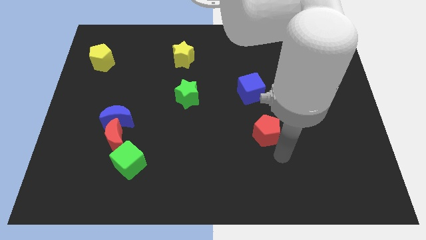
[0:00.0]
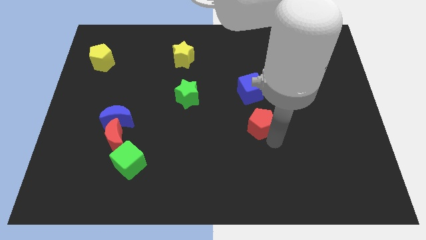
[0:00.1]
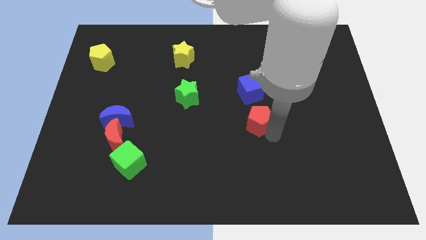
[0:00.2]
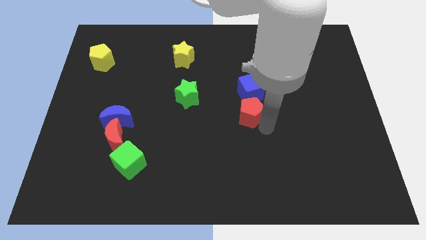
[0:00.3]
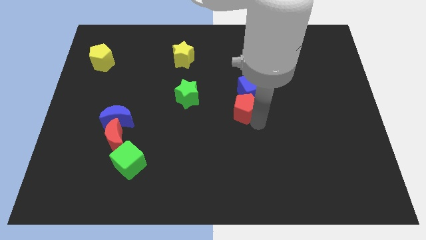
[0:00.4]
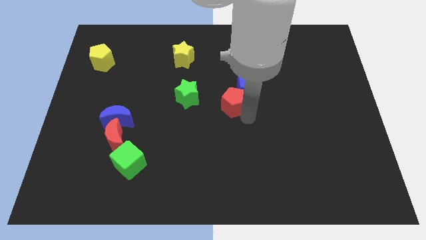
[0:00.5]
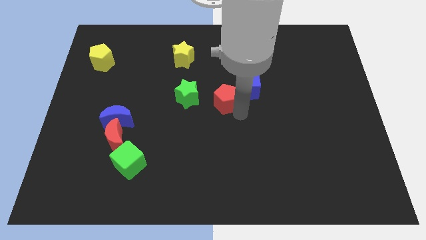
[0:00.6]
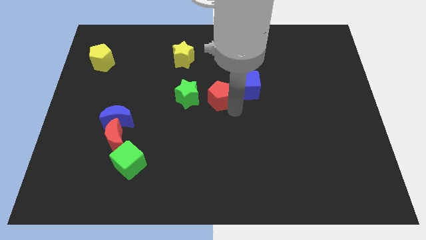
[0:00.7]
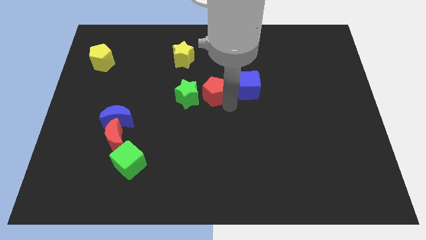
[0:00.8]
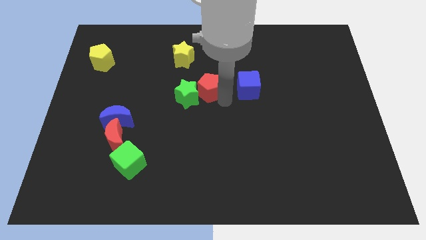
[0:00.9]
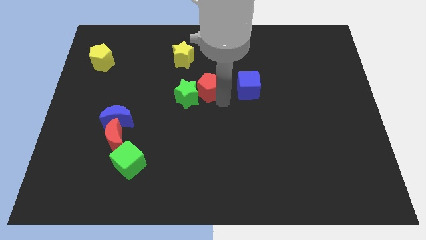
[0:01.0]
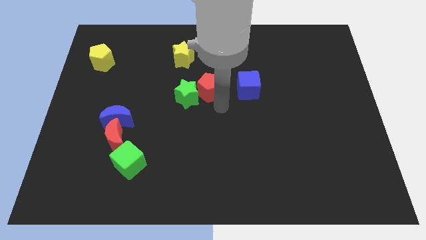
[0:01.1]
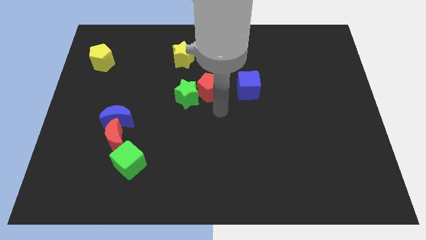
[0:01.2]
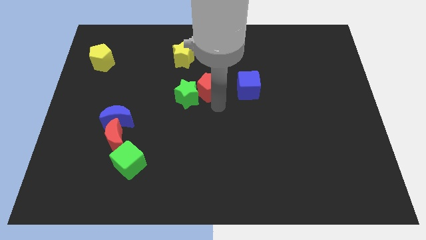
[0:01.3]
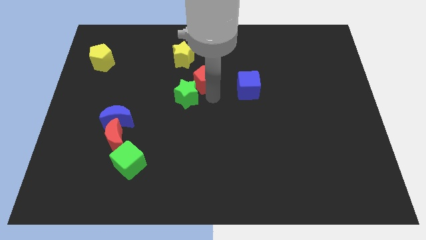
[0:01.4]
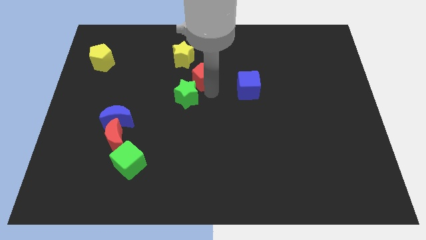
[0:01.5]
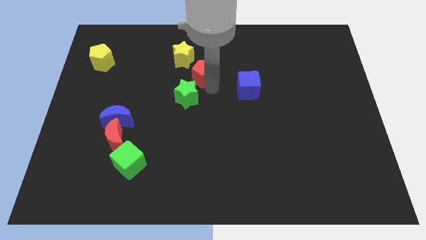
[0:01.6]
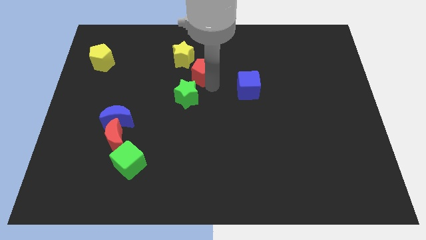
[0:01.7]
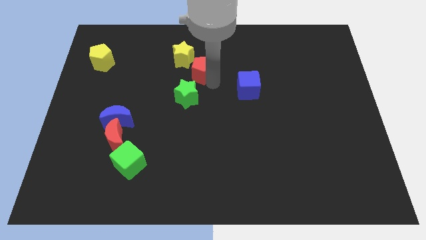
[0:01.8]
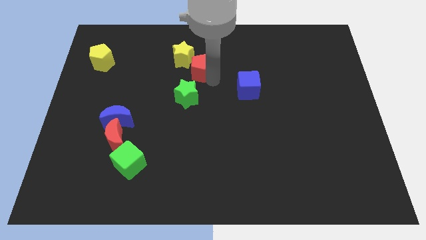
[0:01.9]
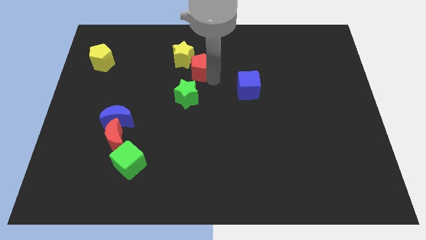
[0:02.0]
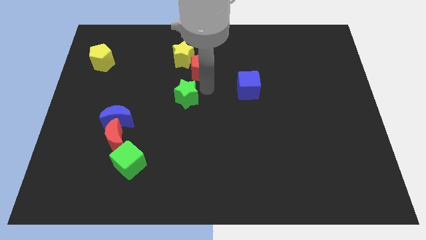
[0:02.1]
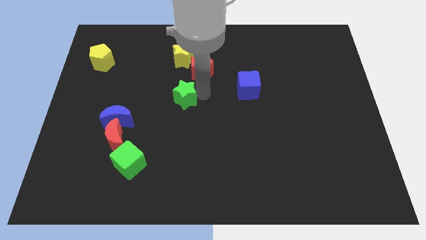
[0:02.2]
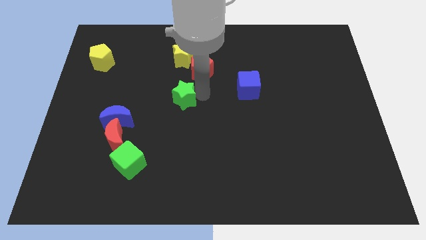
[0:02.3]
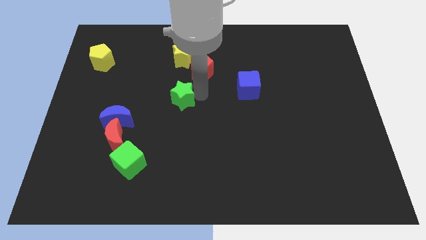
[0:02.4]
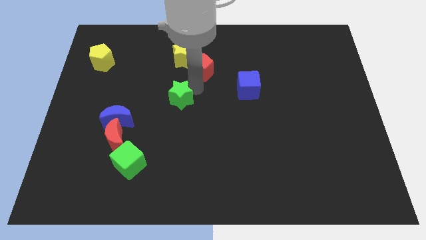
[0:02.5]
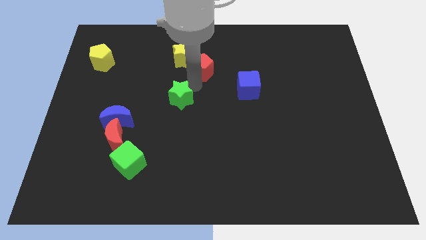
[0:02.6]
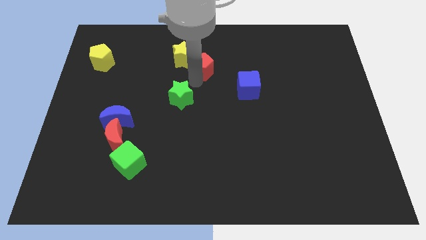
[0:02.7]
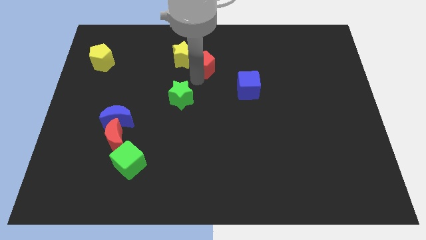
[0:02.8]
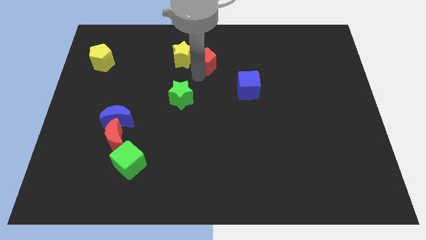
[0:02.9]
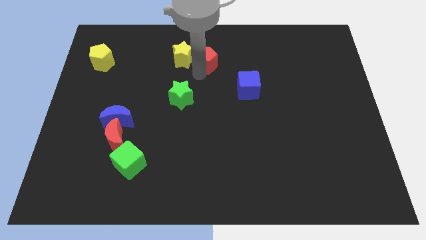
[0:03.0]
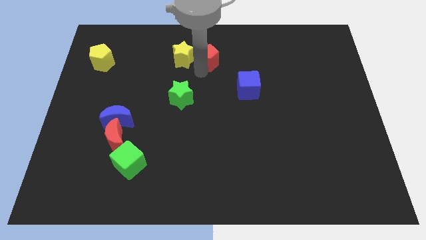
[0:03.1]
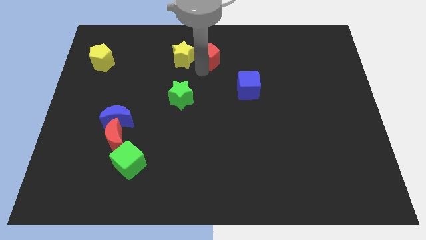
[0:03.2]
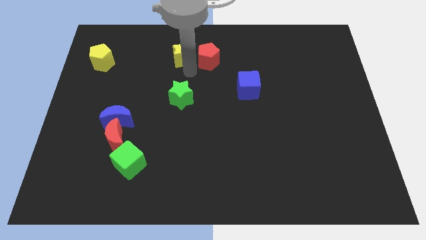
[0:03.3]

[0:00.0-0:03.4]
push the red pentagon to the right of the yellow star

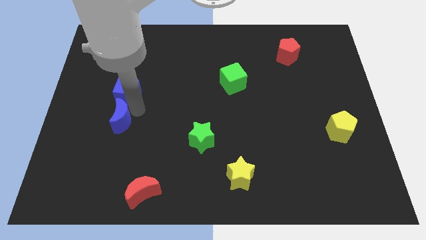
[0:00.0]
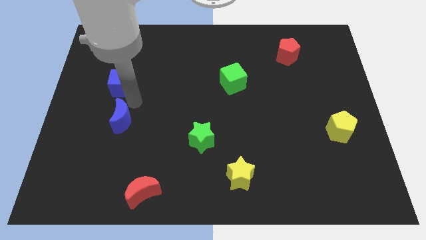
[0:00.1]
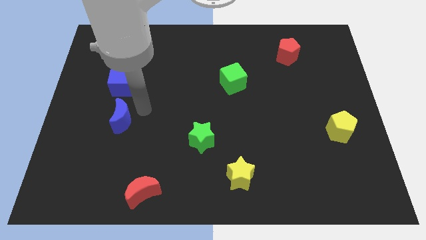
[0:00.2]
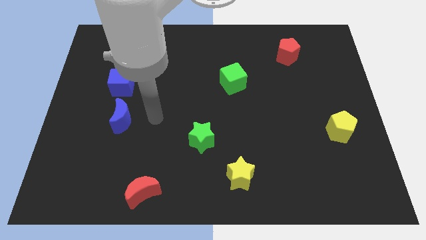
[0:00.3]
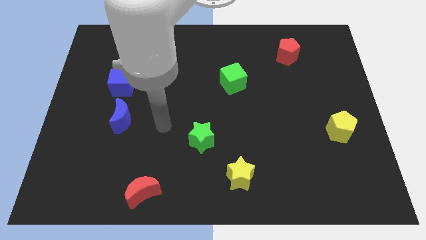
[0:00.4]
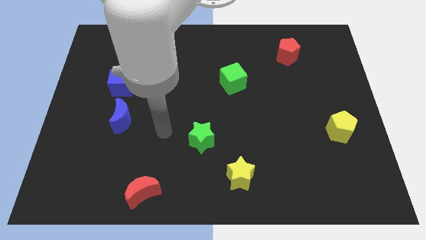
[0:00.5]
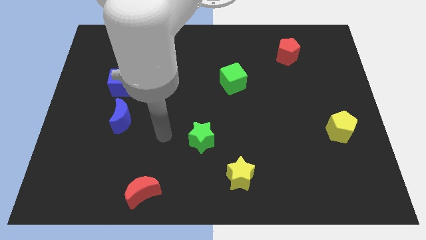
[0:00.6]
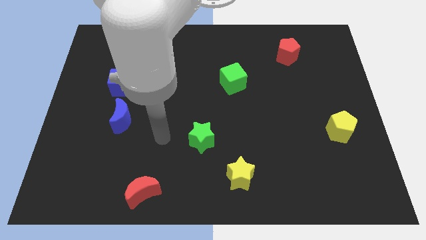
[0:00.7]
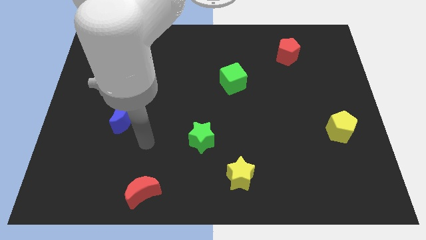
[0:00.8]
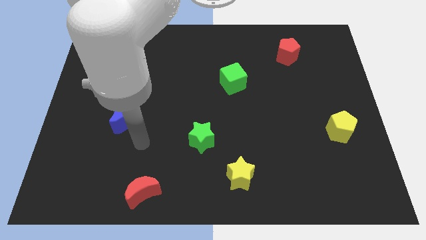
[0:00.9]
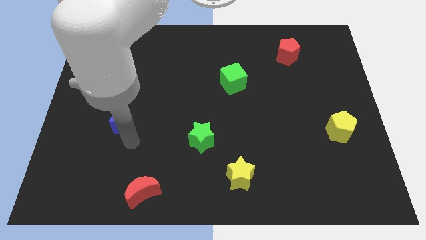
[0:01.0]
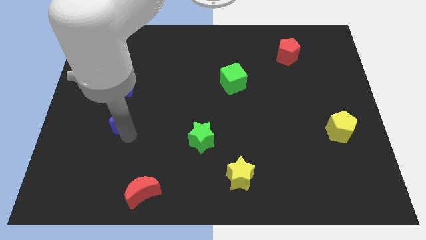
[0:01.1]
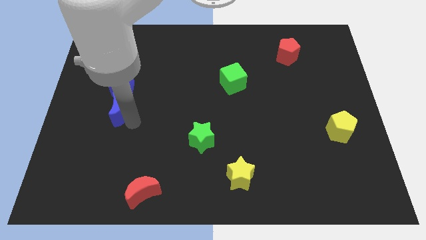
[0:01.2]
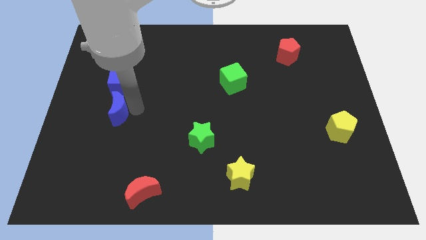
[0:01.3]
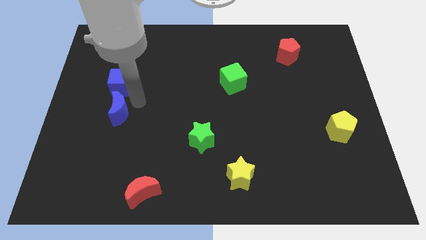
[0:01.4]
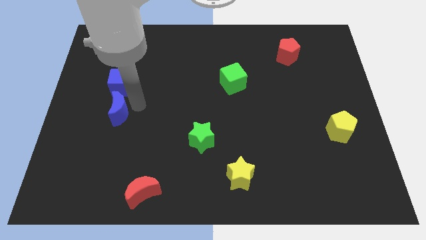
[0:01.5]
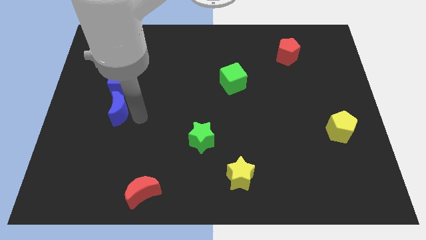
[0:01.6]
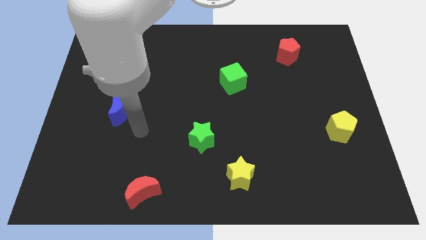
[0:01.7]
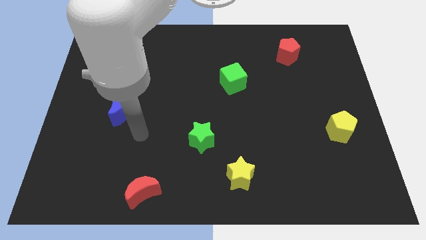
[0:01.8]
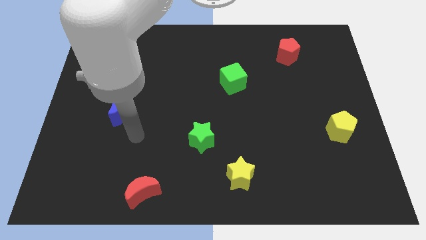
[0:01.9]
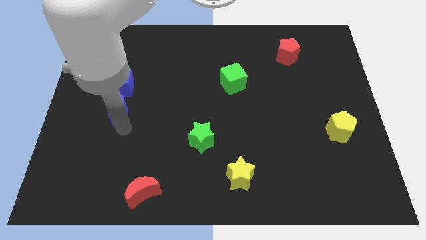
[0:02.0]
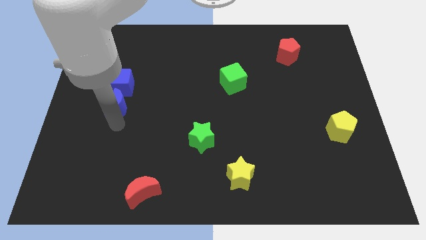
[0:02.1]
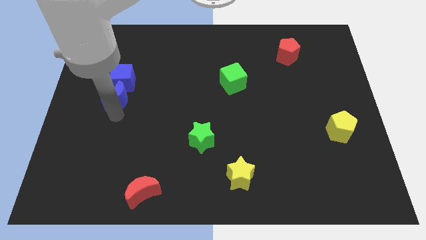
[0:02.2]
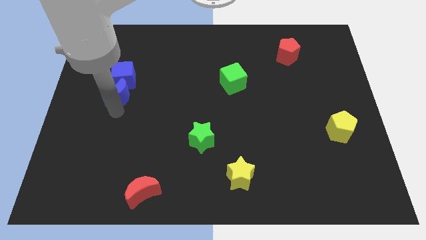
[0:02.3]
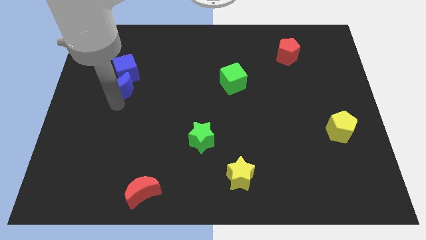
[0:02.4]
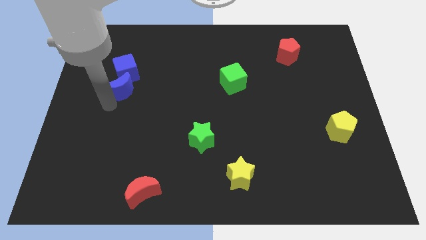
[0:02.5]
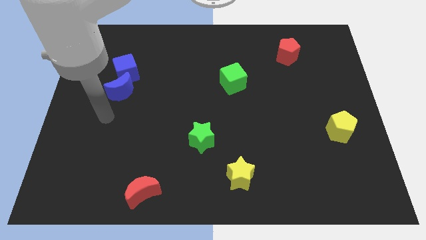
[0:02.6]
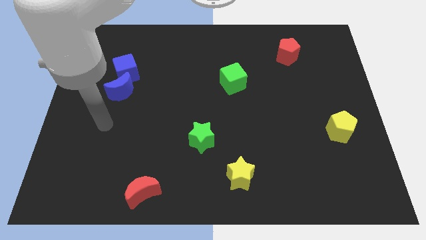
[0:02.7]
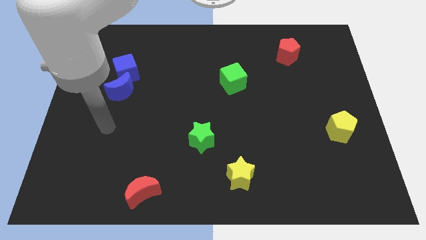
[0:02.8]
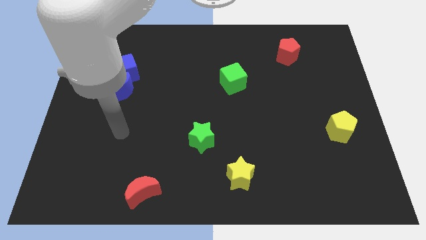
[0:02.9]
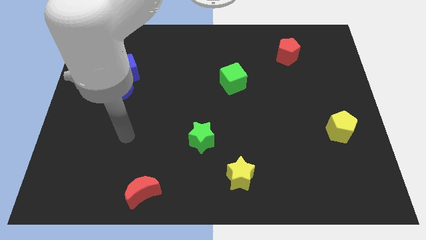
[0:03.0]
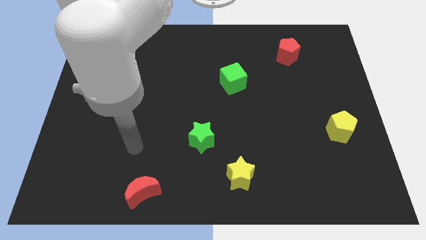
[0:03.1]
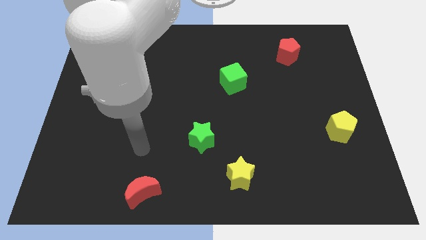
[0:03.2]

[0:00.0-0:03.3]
push the blue crescent into the blue cube

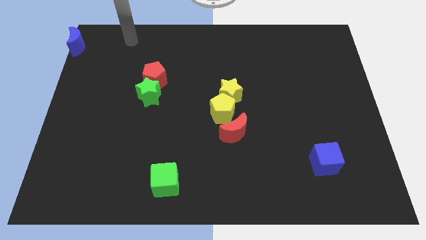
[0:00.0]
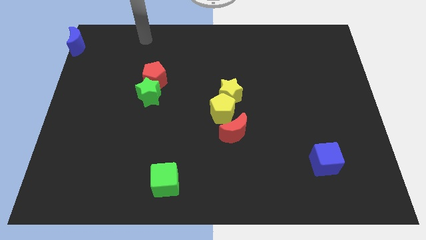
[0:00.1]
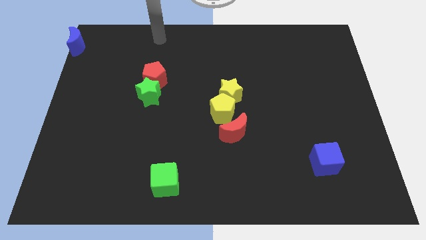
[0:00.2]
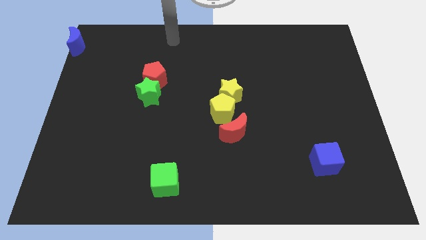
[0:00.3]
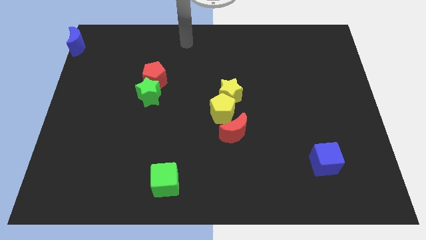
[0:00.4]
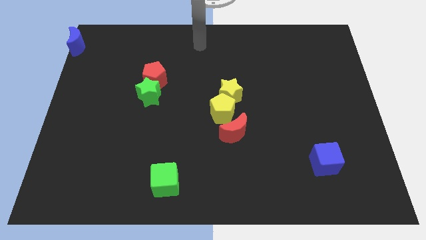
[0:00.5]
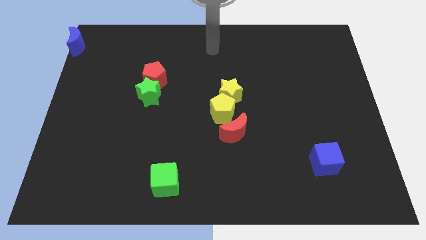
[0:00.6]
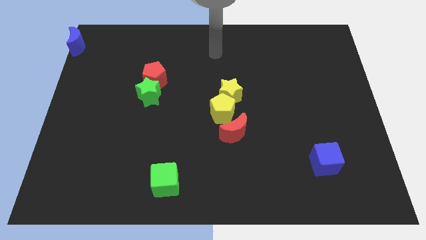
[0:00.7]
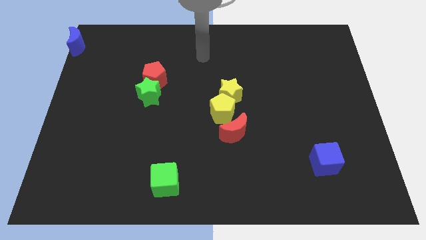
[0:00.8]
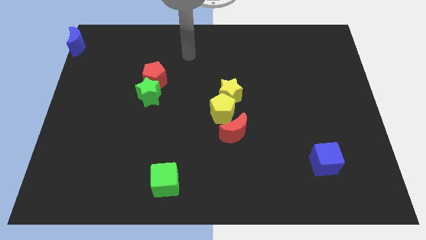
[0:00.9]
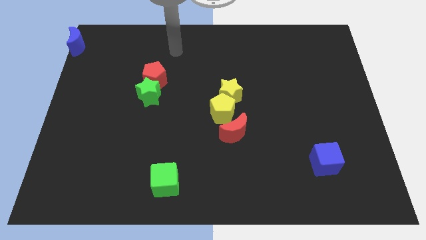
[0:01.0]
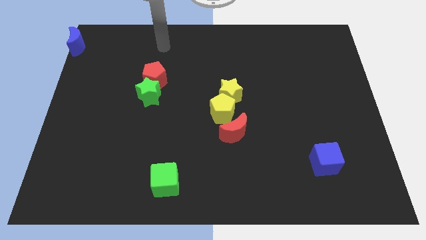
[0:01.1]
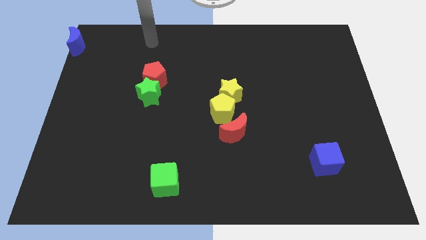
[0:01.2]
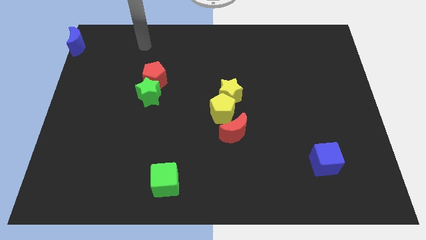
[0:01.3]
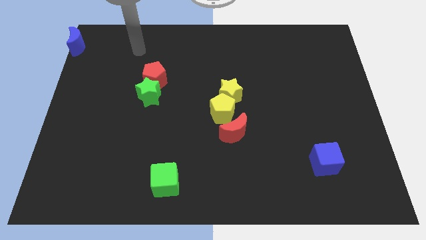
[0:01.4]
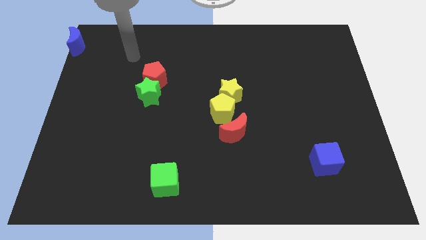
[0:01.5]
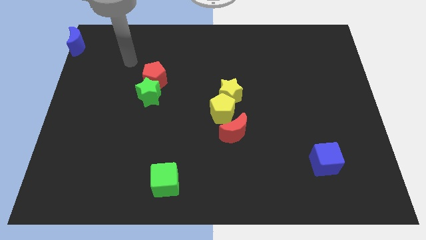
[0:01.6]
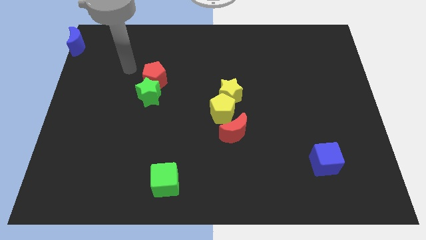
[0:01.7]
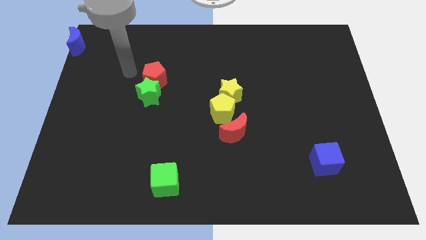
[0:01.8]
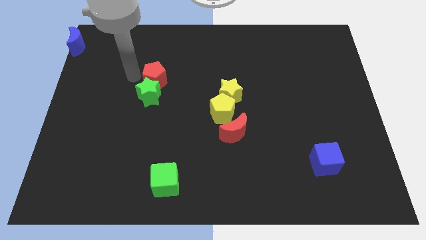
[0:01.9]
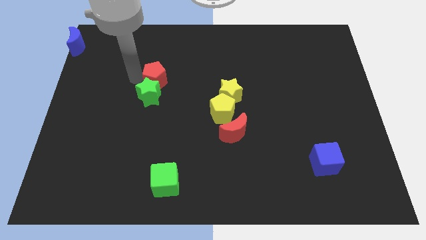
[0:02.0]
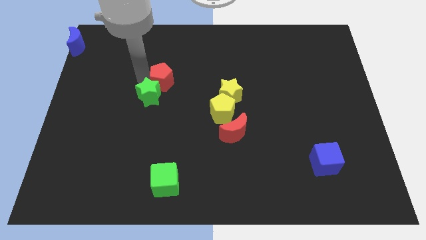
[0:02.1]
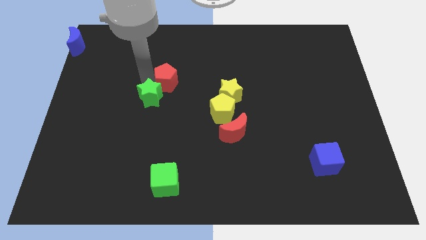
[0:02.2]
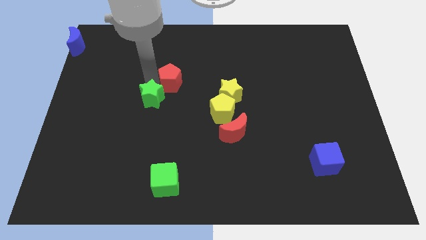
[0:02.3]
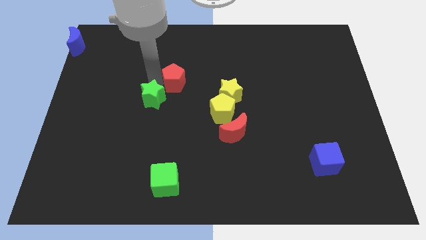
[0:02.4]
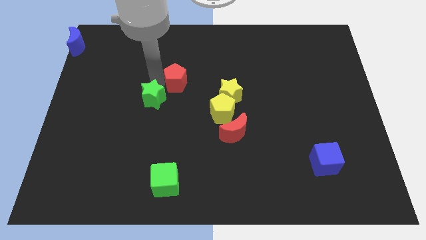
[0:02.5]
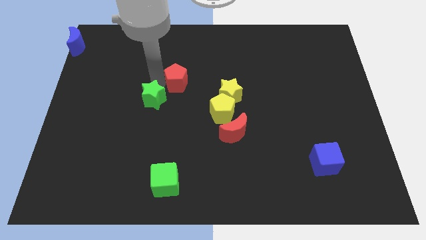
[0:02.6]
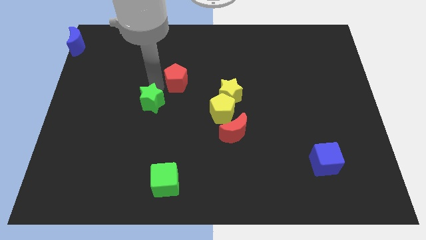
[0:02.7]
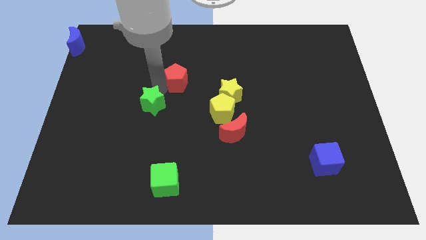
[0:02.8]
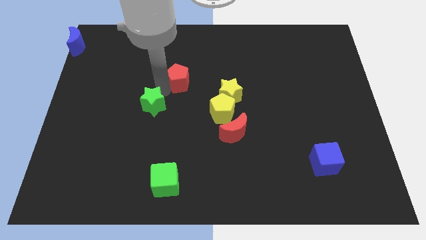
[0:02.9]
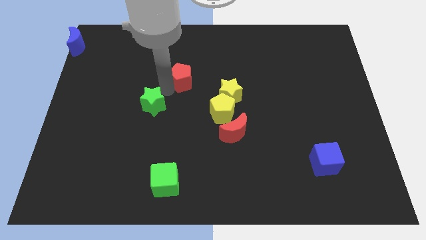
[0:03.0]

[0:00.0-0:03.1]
place your arm in between the green star and red pentagon
